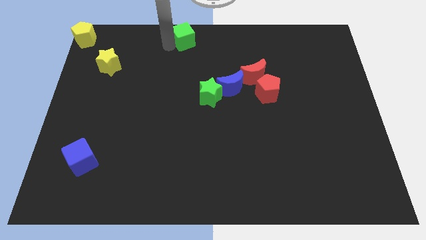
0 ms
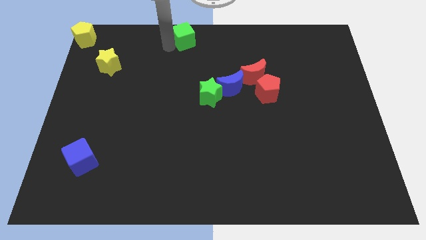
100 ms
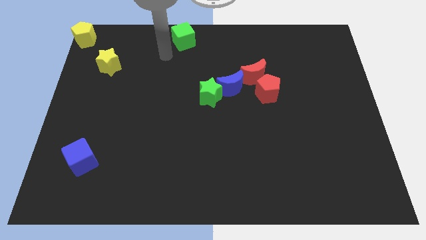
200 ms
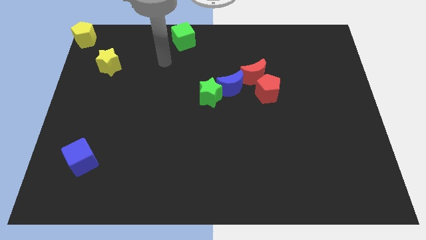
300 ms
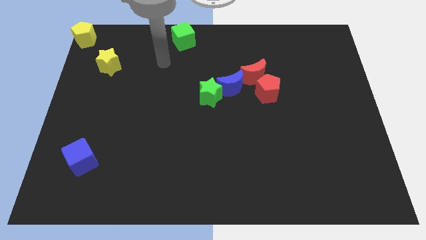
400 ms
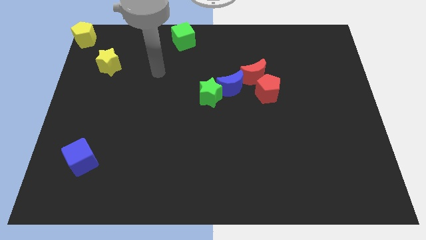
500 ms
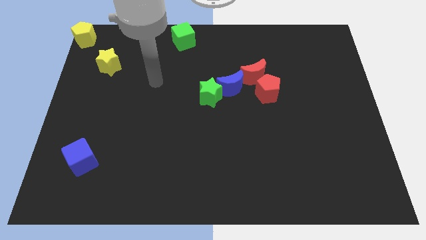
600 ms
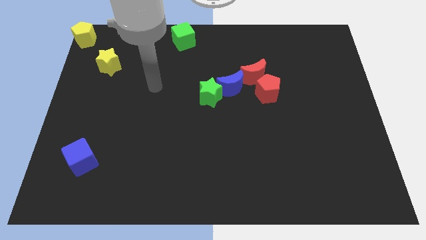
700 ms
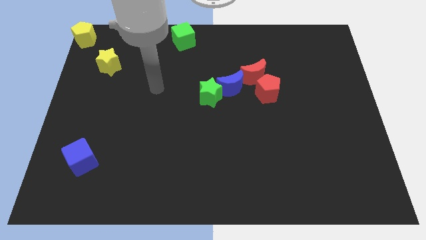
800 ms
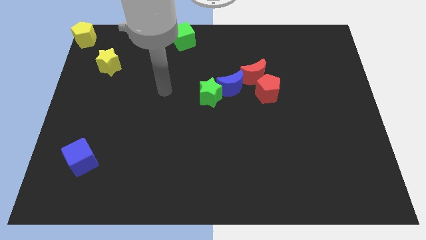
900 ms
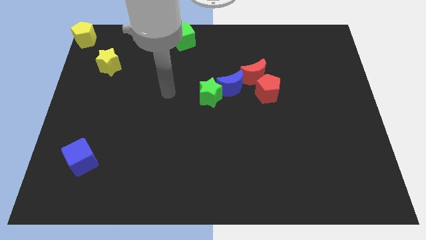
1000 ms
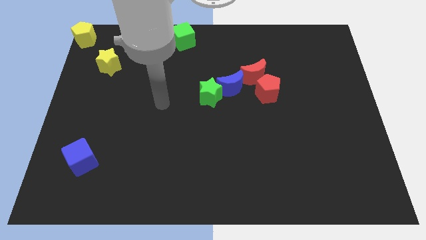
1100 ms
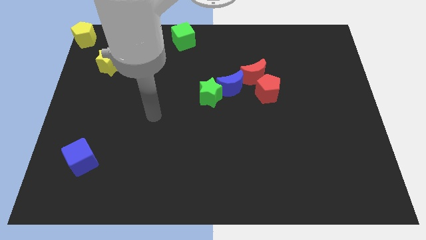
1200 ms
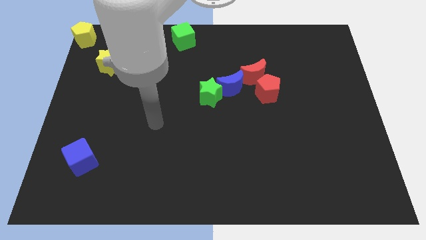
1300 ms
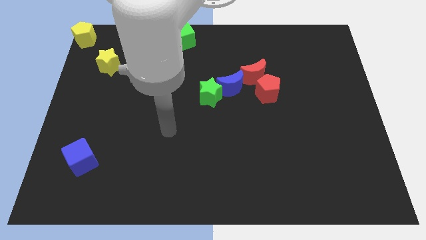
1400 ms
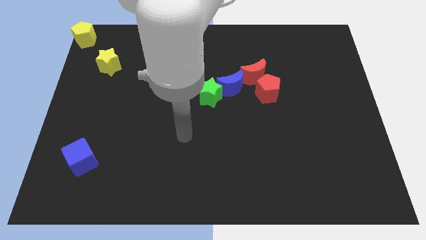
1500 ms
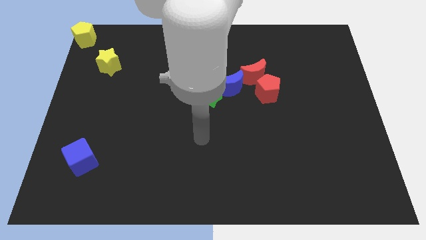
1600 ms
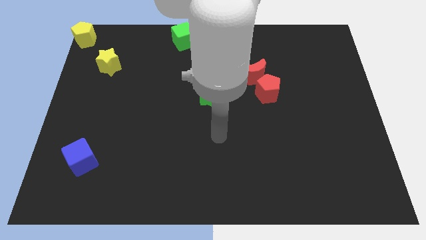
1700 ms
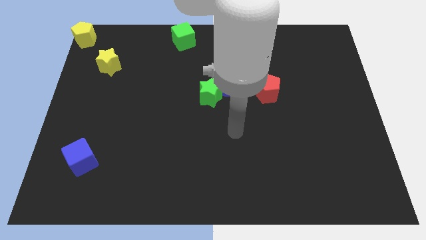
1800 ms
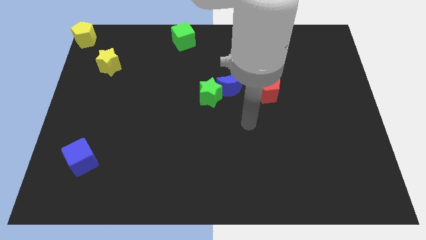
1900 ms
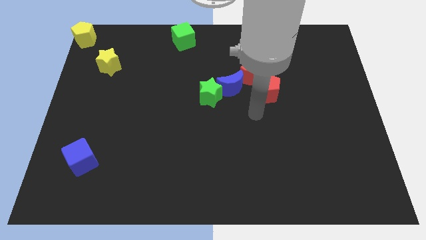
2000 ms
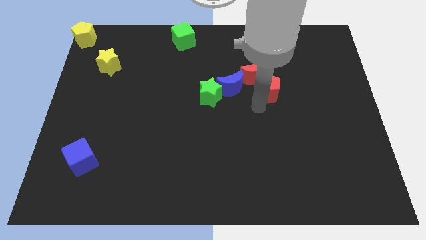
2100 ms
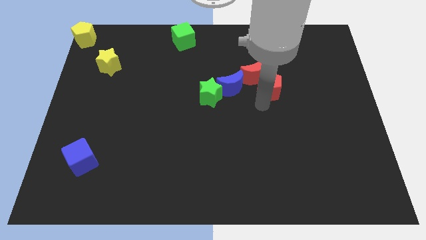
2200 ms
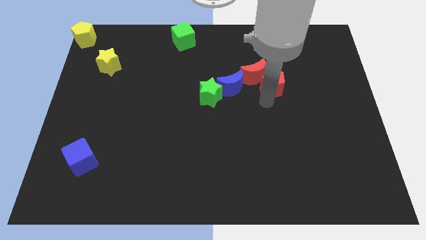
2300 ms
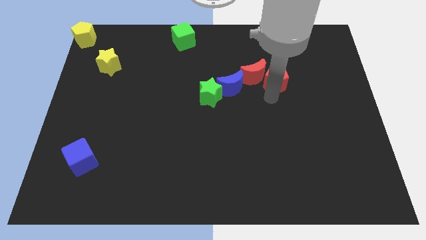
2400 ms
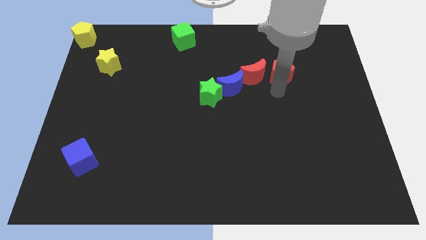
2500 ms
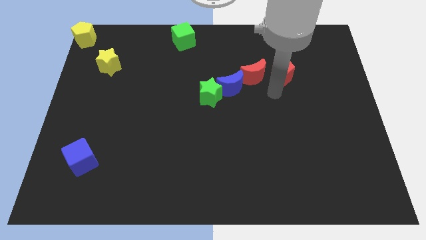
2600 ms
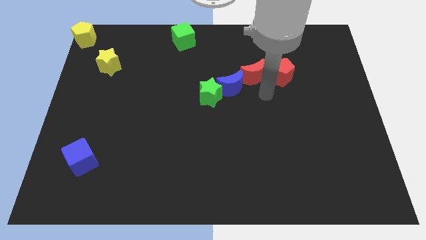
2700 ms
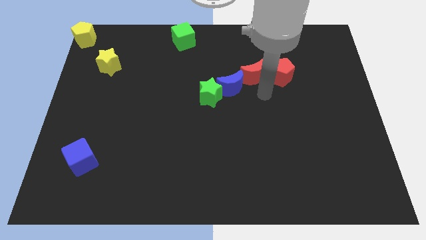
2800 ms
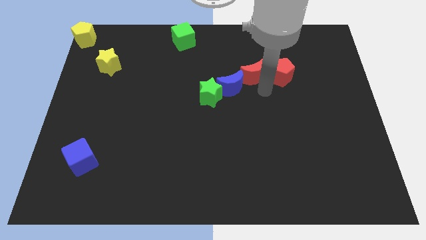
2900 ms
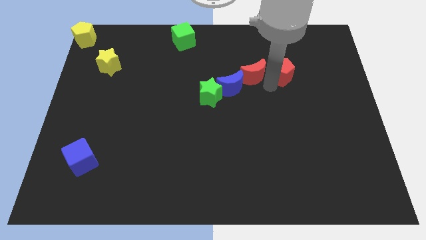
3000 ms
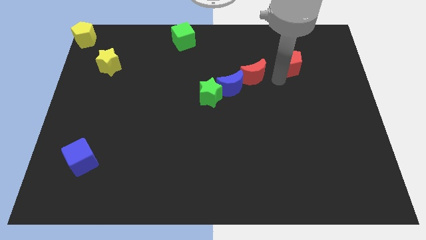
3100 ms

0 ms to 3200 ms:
slightly push the red pentagon right to the red crescent

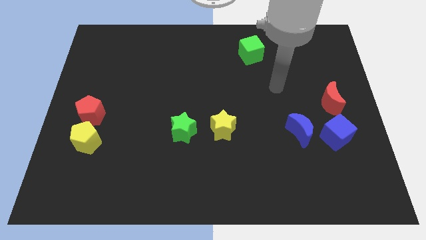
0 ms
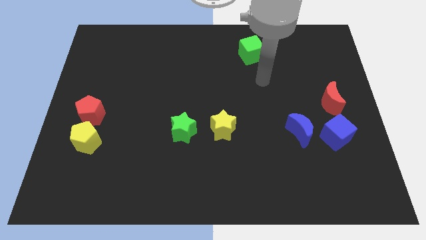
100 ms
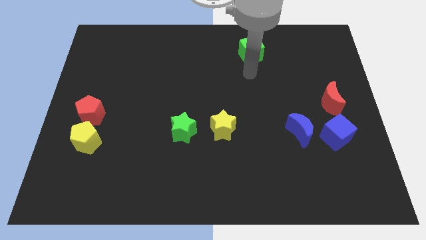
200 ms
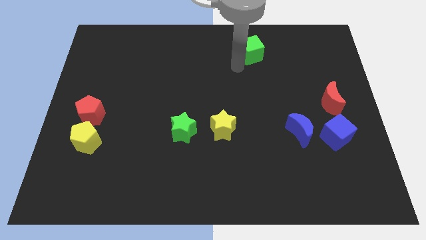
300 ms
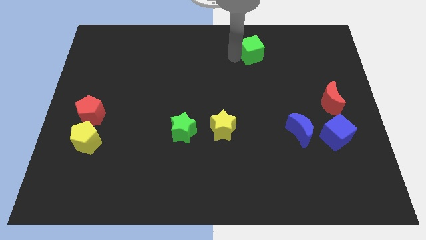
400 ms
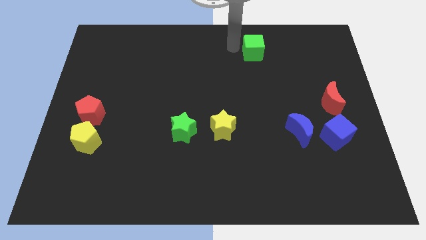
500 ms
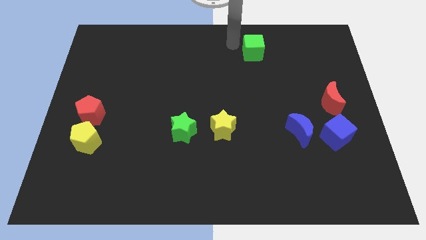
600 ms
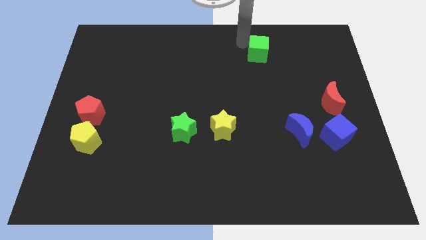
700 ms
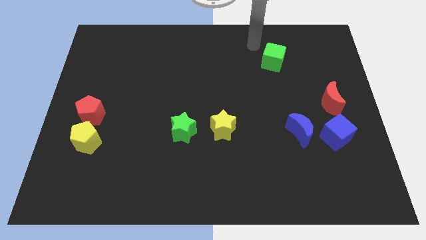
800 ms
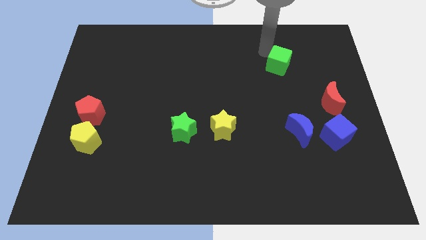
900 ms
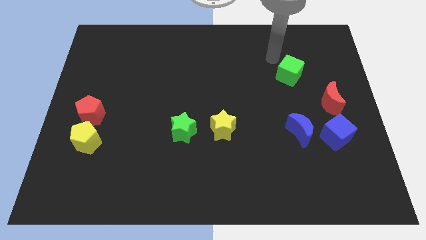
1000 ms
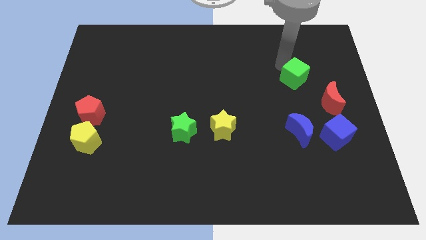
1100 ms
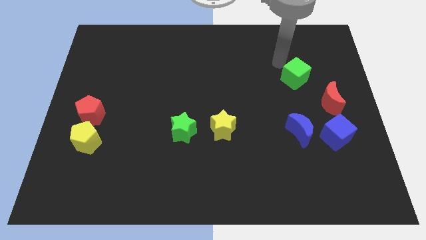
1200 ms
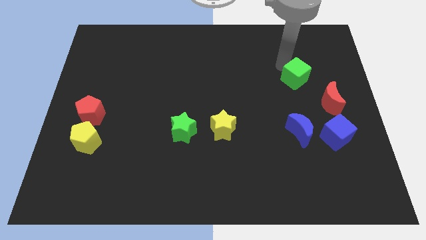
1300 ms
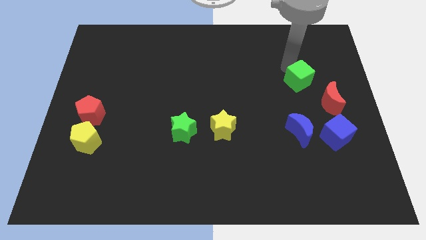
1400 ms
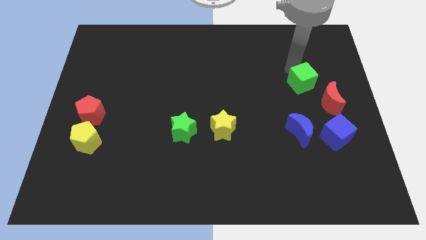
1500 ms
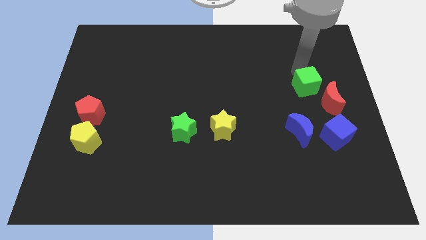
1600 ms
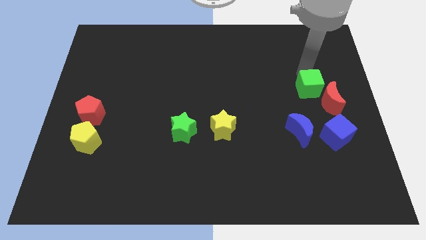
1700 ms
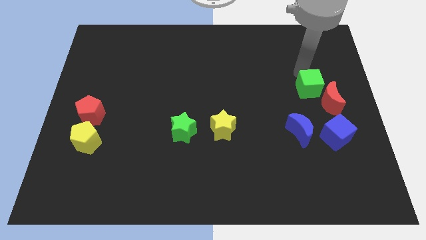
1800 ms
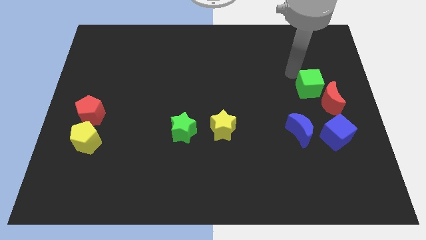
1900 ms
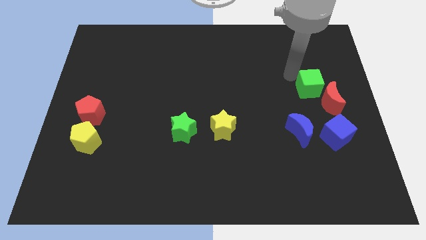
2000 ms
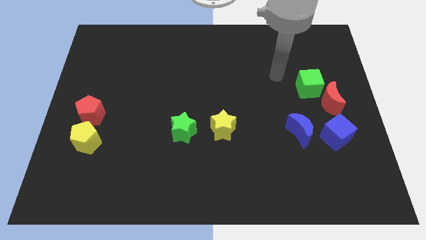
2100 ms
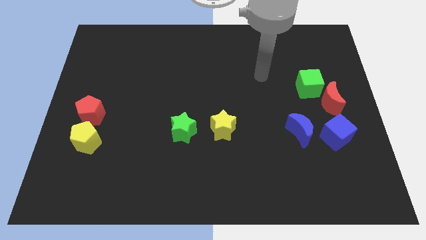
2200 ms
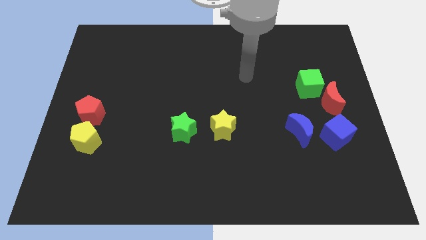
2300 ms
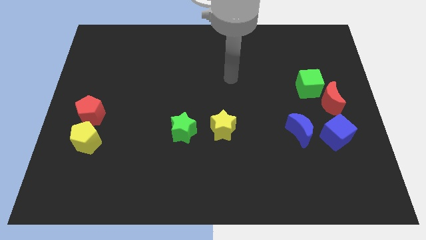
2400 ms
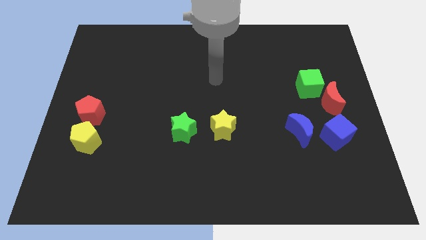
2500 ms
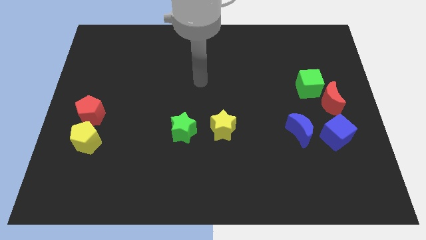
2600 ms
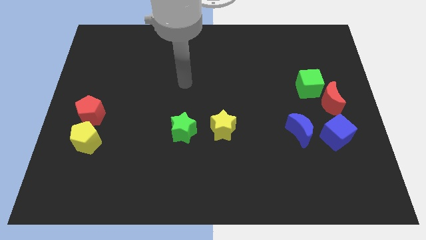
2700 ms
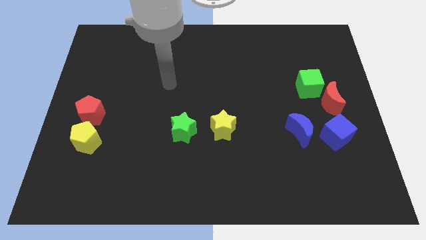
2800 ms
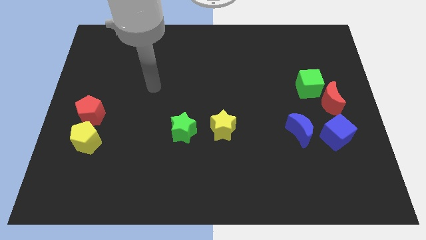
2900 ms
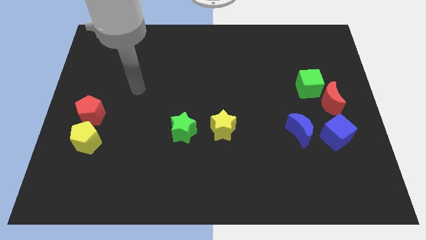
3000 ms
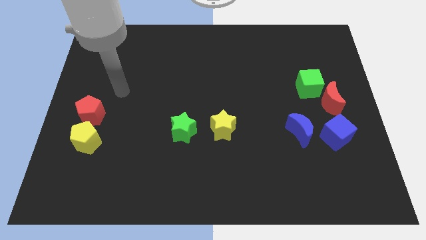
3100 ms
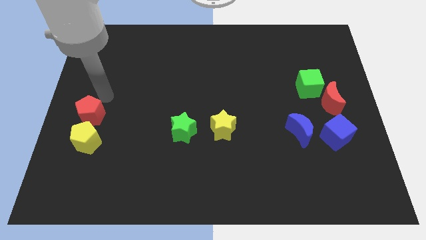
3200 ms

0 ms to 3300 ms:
push the green cube beside to the red crescent

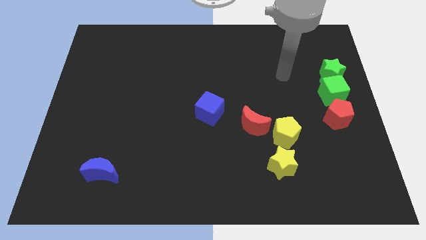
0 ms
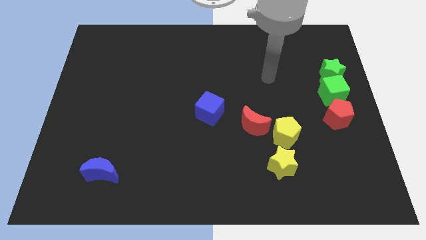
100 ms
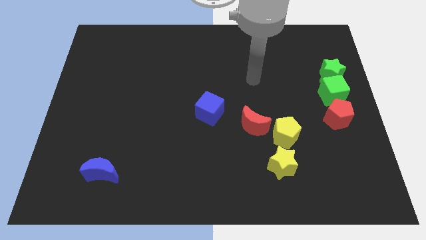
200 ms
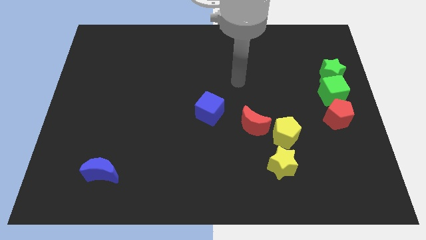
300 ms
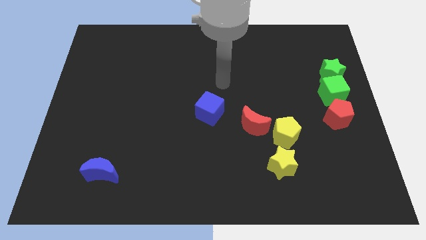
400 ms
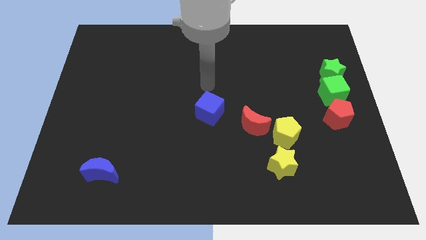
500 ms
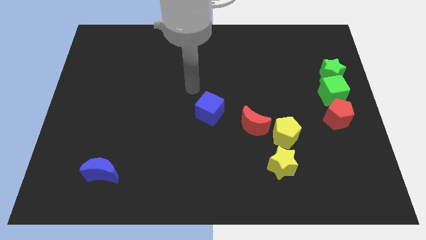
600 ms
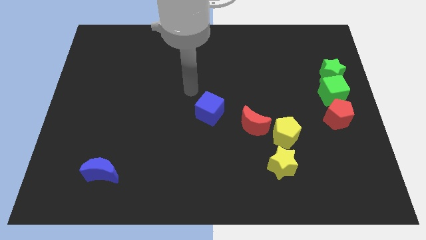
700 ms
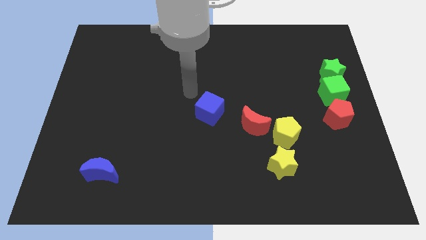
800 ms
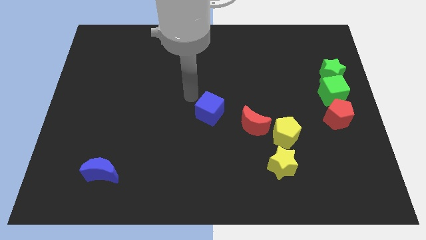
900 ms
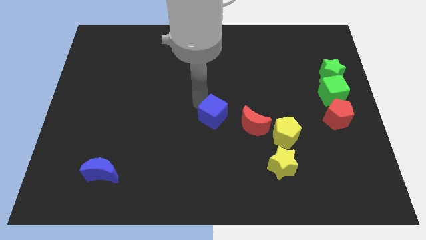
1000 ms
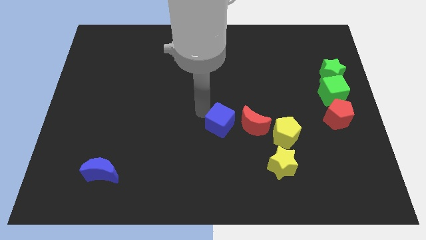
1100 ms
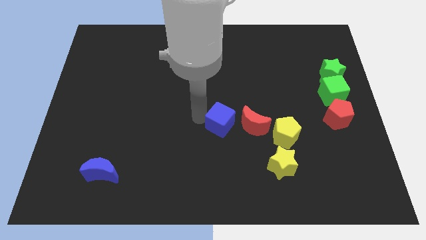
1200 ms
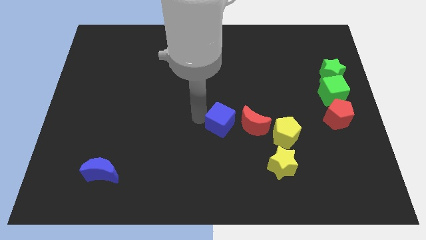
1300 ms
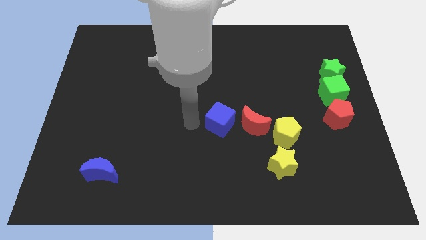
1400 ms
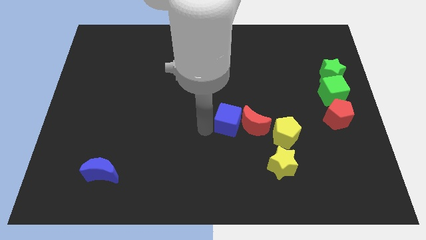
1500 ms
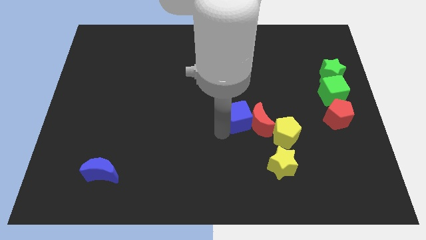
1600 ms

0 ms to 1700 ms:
push the blue cube into the red crescent

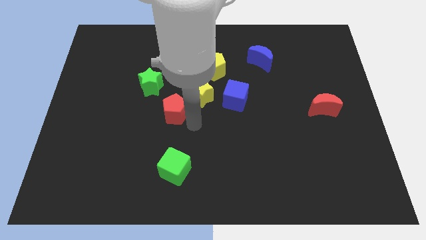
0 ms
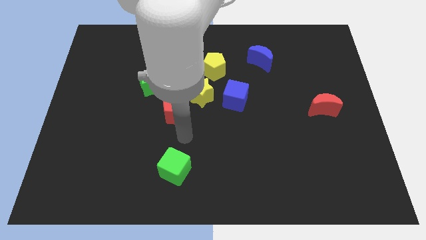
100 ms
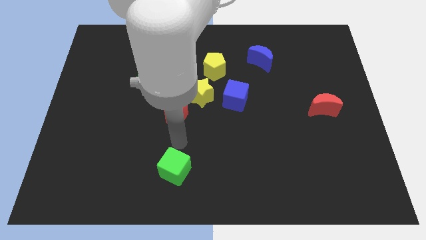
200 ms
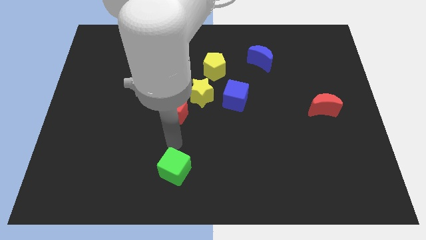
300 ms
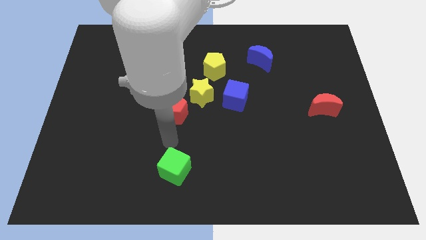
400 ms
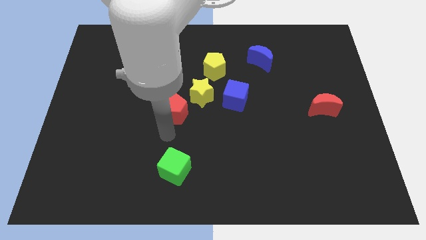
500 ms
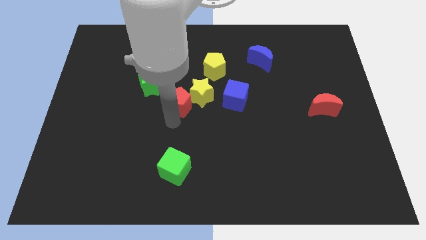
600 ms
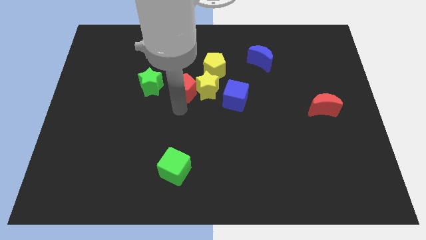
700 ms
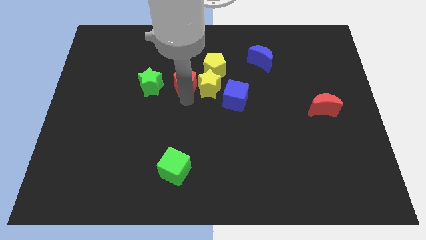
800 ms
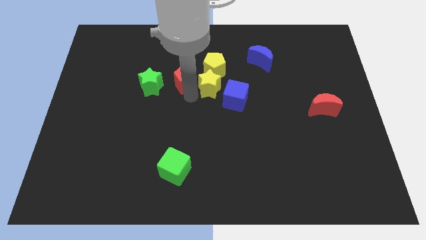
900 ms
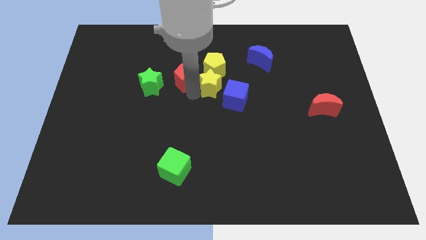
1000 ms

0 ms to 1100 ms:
push the red pentagon to the left of the yellow star
